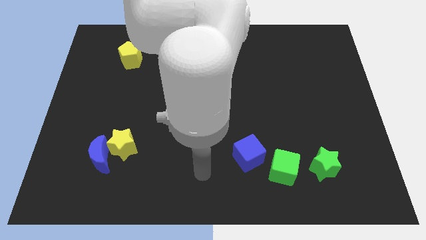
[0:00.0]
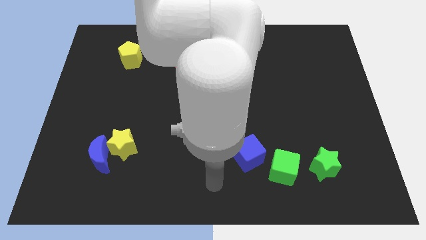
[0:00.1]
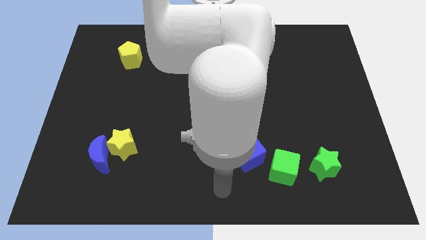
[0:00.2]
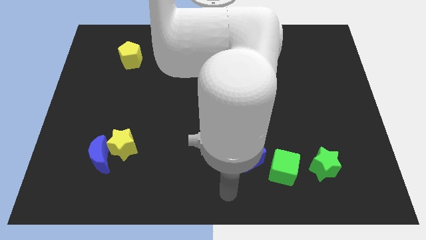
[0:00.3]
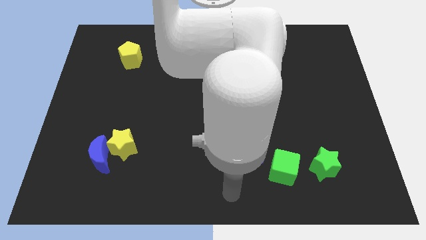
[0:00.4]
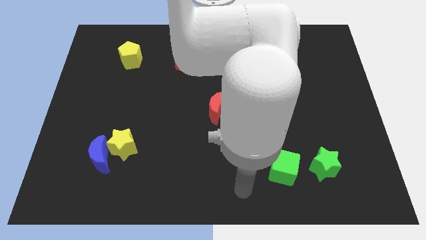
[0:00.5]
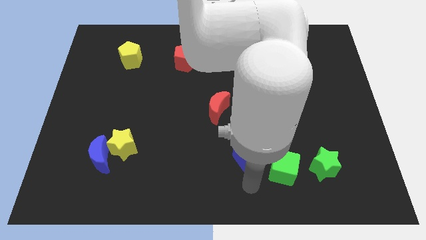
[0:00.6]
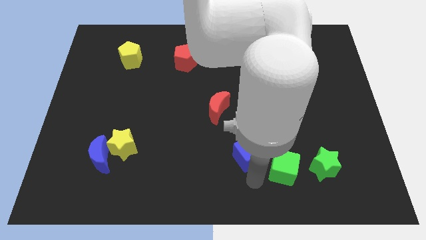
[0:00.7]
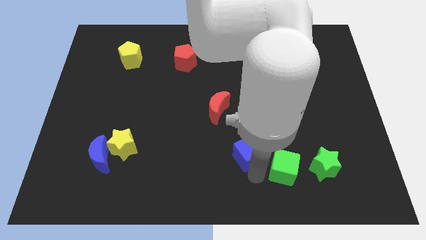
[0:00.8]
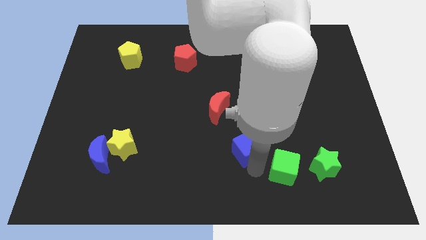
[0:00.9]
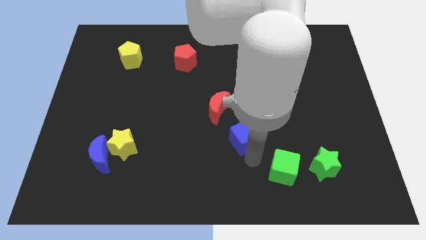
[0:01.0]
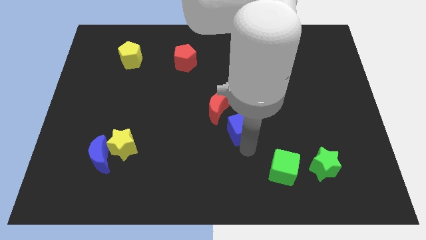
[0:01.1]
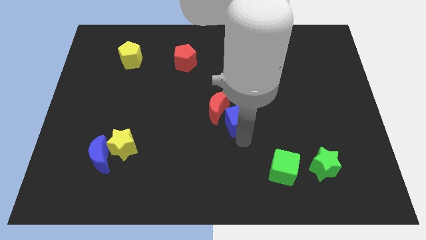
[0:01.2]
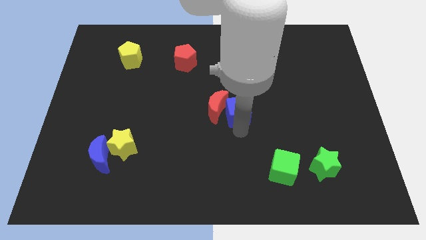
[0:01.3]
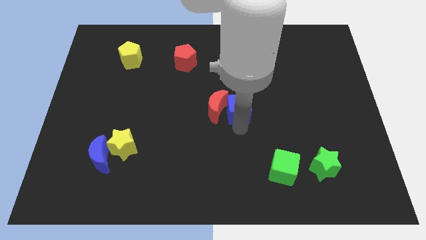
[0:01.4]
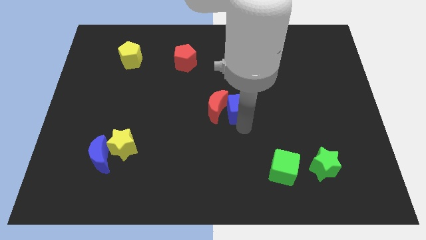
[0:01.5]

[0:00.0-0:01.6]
move blue cube to the right side of the red crescent

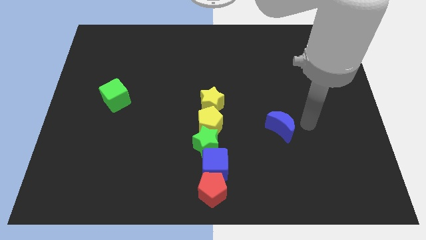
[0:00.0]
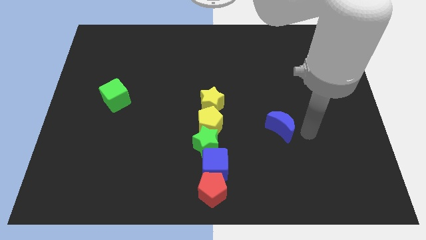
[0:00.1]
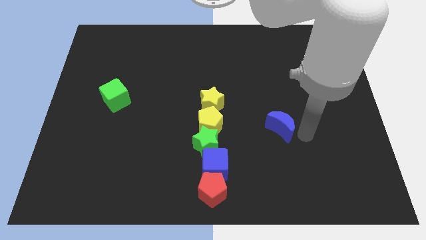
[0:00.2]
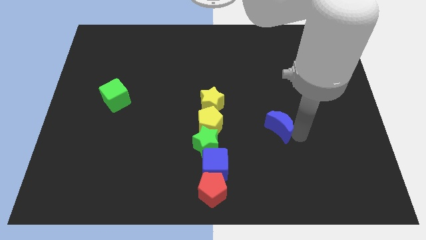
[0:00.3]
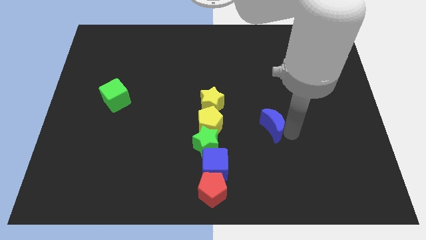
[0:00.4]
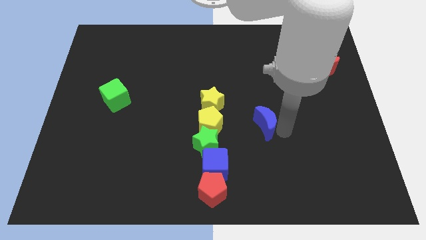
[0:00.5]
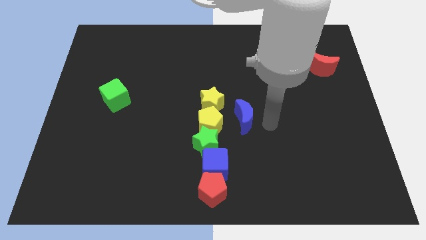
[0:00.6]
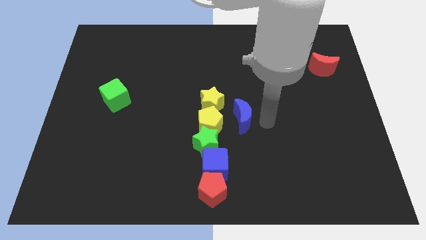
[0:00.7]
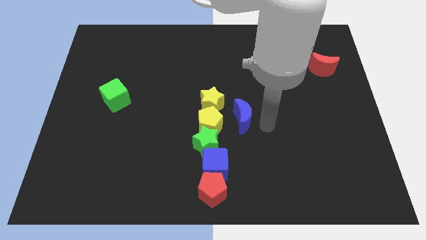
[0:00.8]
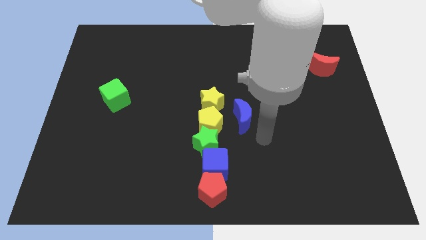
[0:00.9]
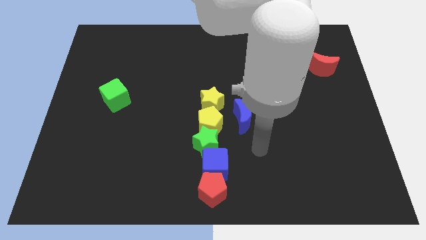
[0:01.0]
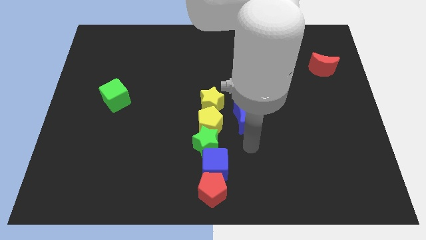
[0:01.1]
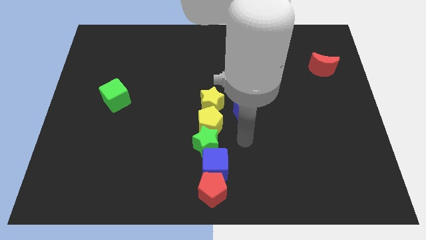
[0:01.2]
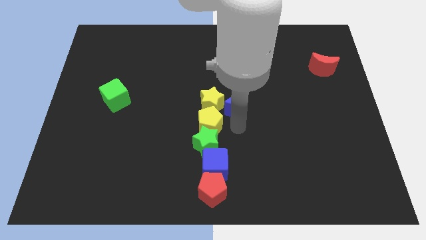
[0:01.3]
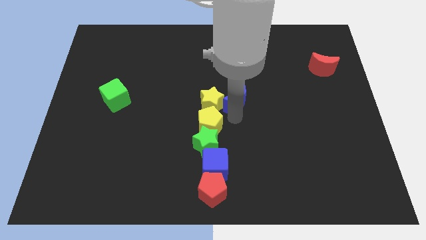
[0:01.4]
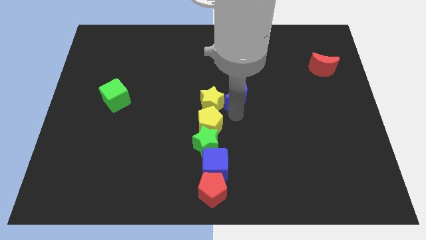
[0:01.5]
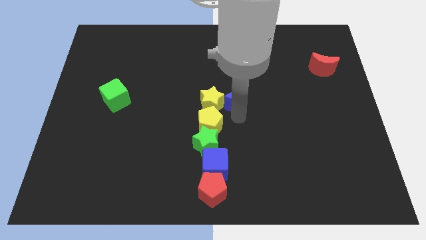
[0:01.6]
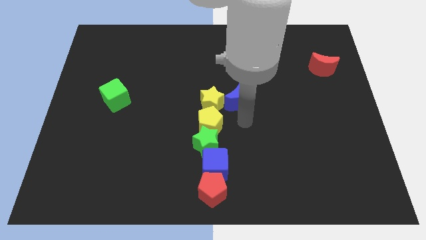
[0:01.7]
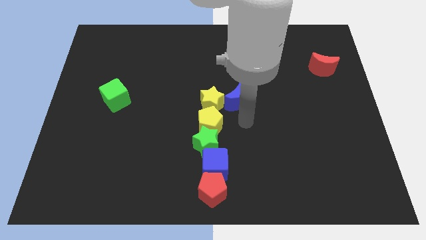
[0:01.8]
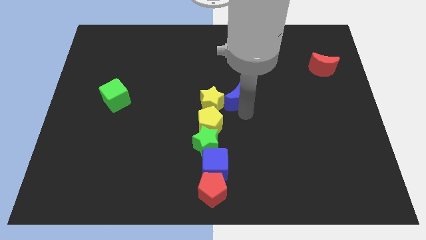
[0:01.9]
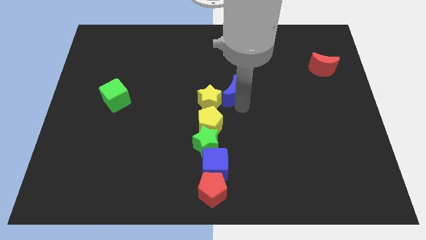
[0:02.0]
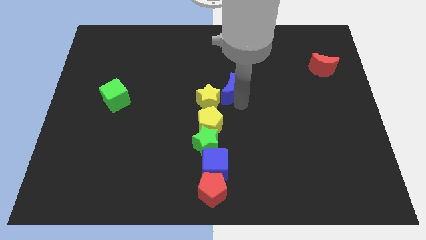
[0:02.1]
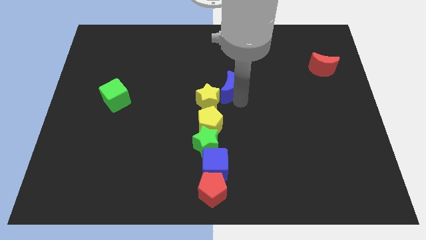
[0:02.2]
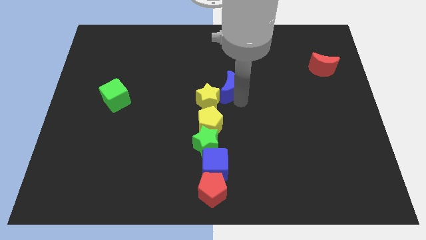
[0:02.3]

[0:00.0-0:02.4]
drag the blue crescent to the top right of yellow star

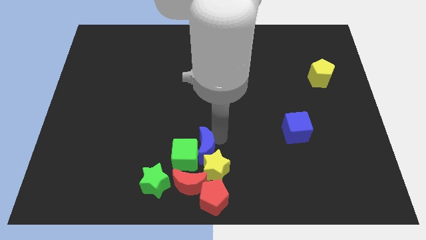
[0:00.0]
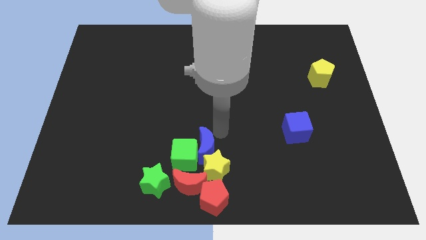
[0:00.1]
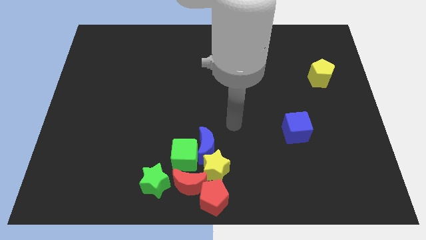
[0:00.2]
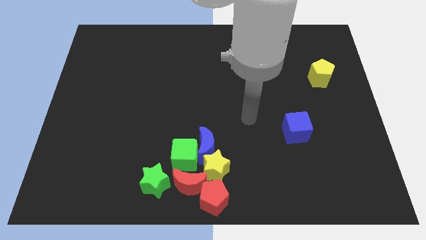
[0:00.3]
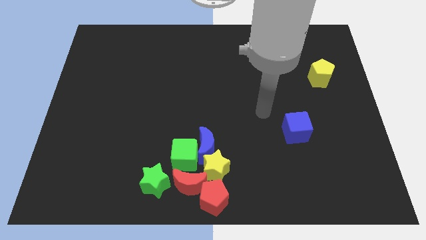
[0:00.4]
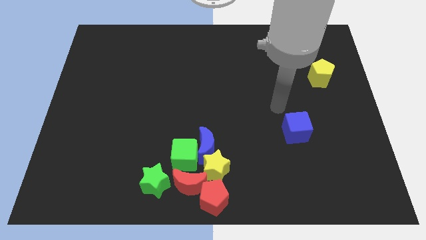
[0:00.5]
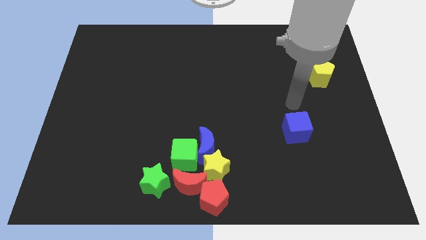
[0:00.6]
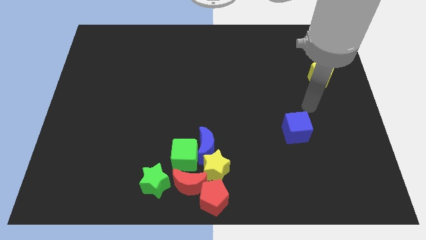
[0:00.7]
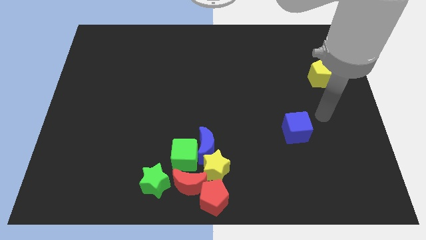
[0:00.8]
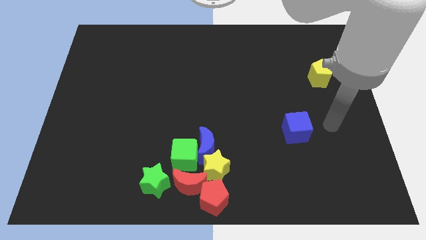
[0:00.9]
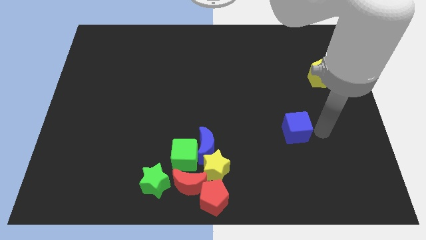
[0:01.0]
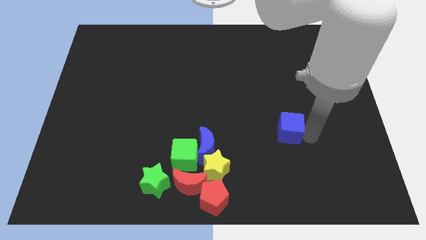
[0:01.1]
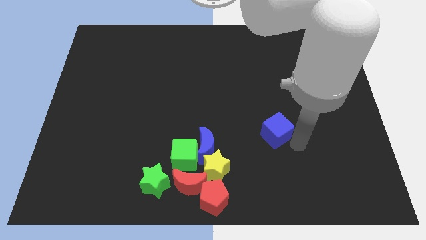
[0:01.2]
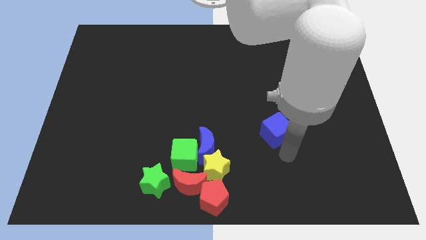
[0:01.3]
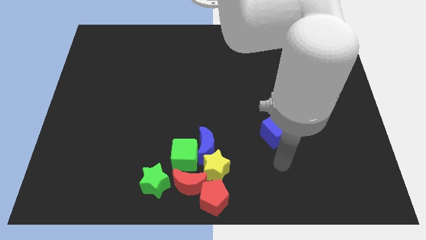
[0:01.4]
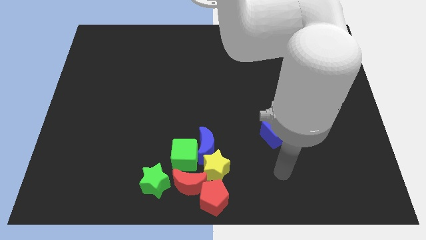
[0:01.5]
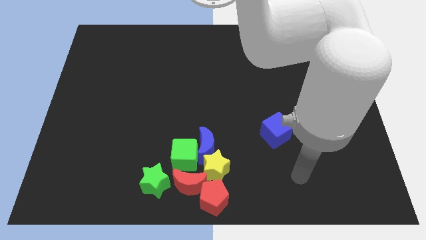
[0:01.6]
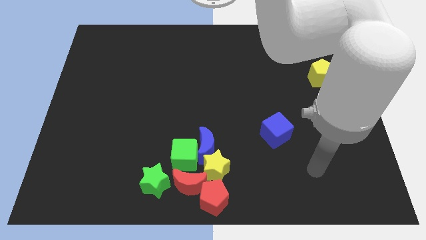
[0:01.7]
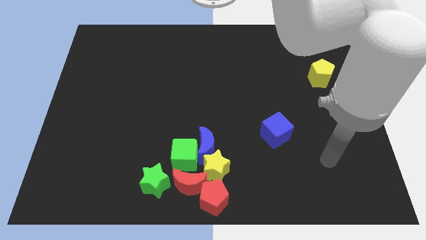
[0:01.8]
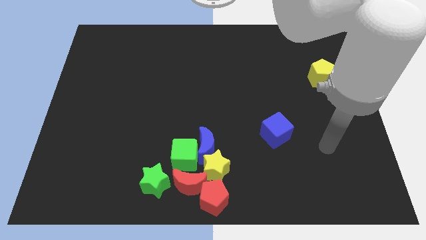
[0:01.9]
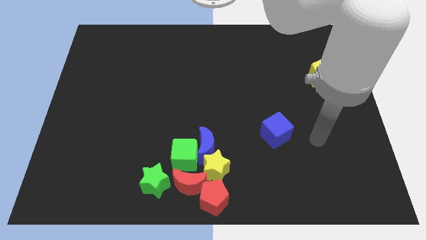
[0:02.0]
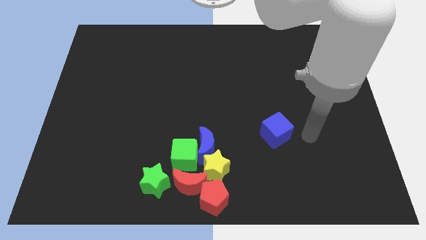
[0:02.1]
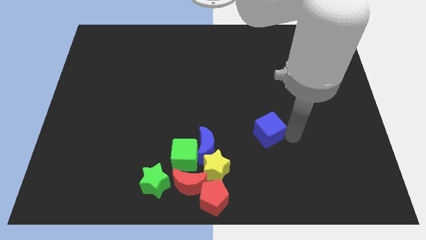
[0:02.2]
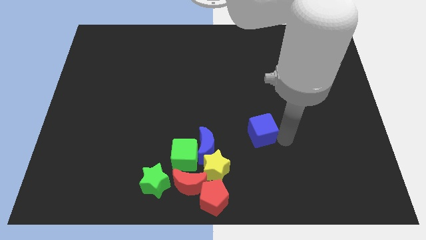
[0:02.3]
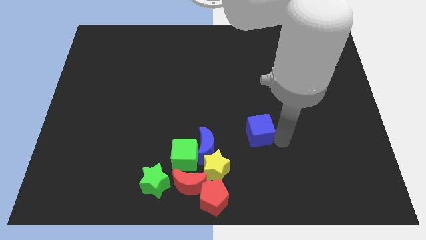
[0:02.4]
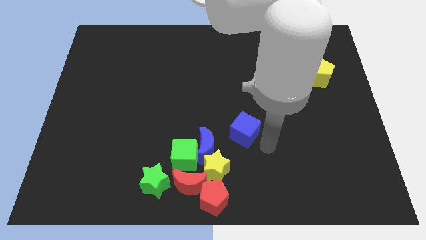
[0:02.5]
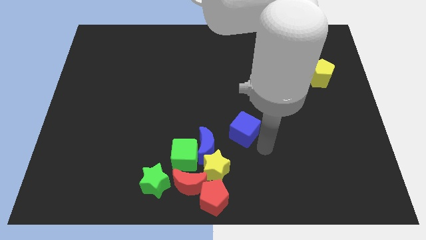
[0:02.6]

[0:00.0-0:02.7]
push the blue cube towards the right of the blue crescent

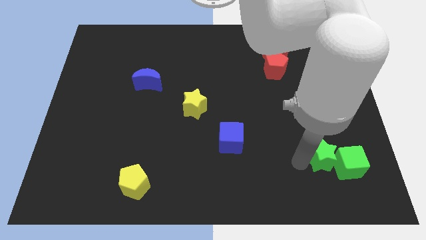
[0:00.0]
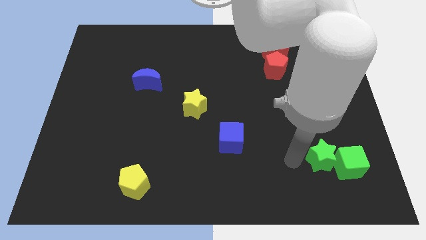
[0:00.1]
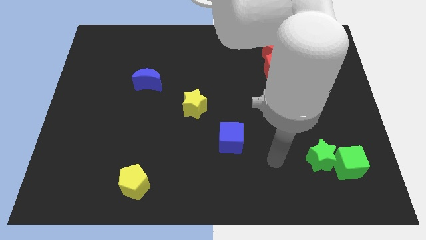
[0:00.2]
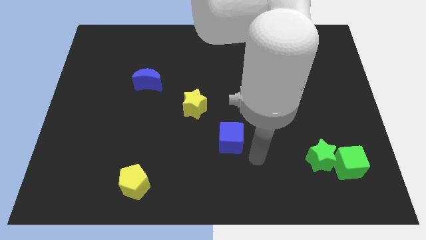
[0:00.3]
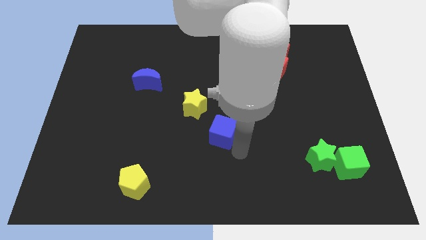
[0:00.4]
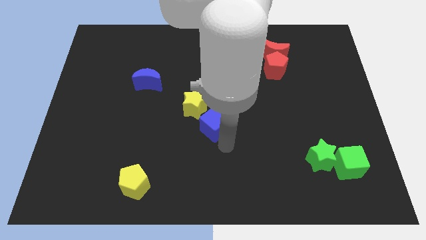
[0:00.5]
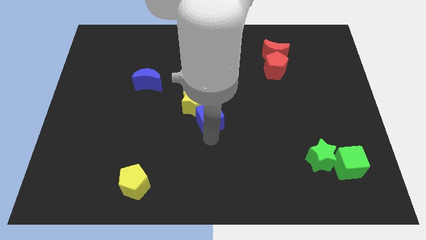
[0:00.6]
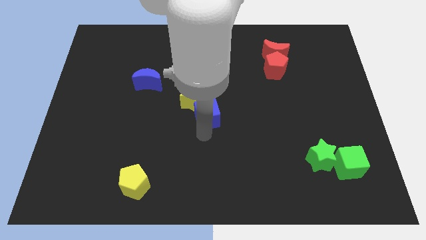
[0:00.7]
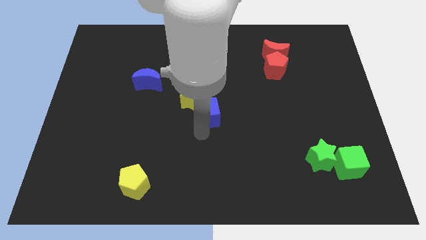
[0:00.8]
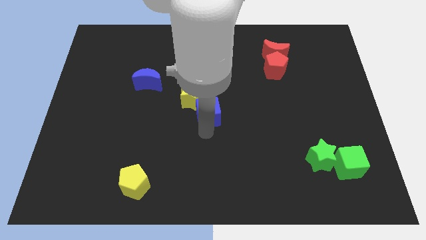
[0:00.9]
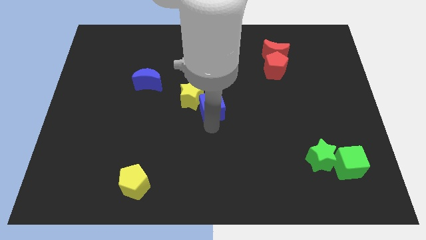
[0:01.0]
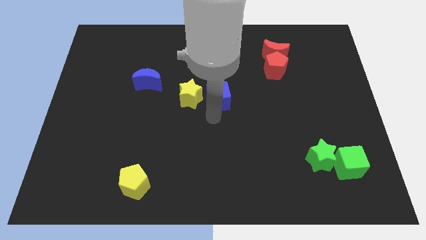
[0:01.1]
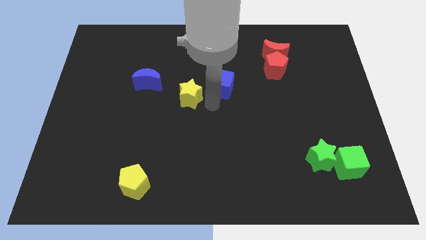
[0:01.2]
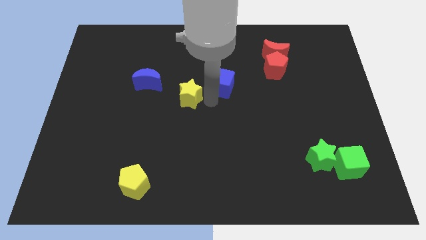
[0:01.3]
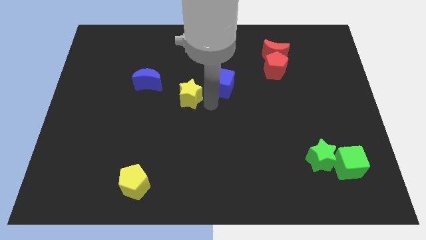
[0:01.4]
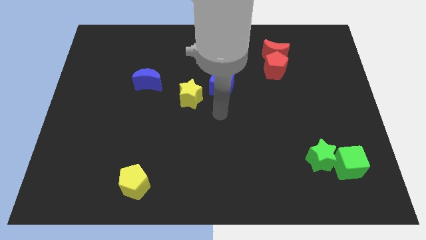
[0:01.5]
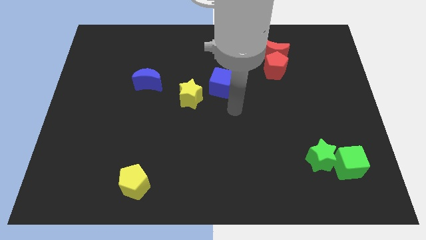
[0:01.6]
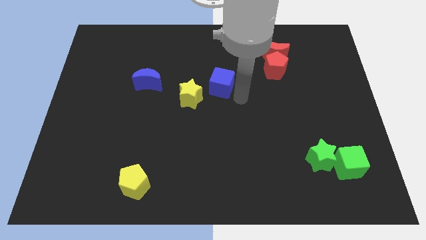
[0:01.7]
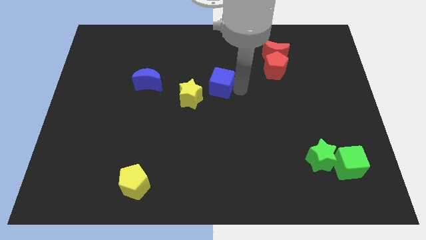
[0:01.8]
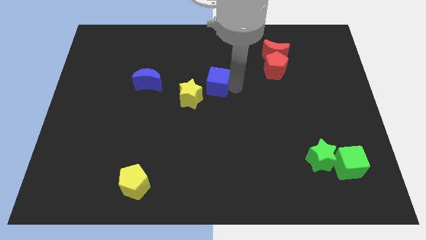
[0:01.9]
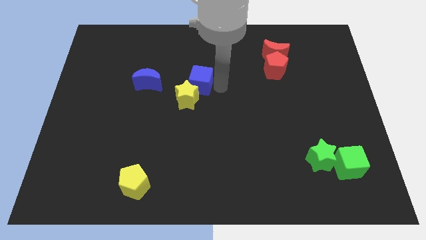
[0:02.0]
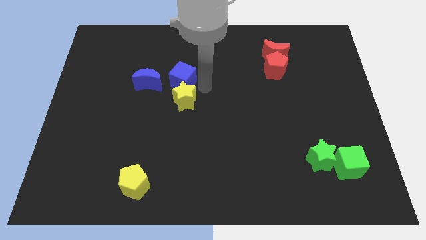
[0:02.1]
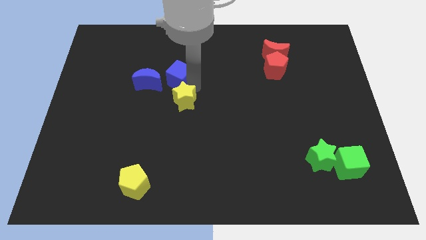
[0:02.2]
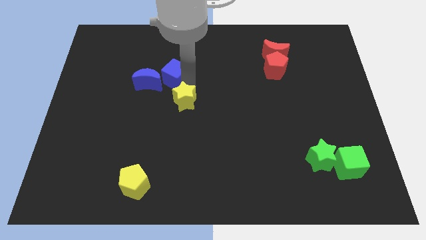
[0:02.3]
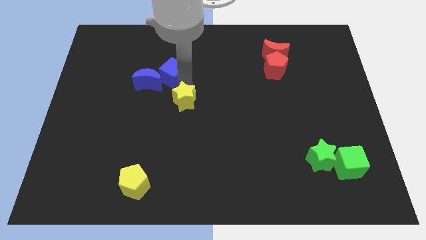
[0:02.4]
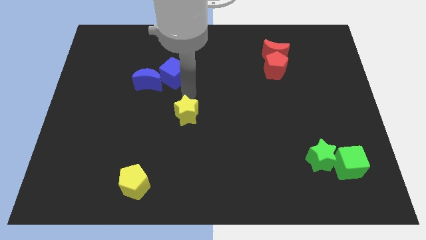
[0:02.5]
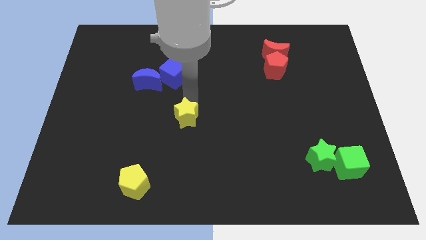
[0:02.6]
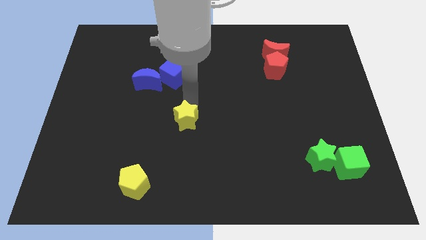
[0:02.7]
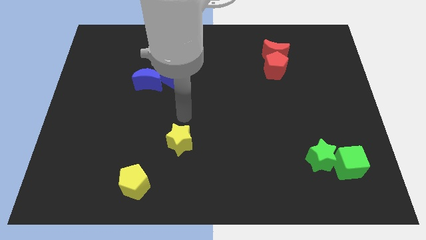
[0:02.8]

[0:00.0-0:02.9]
push the blue cube into the blue moon
